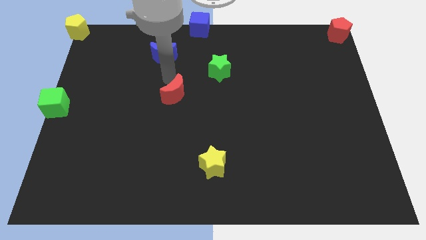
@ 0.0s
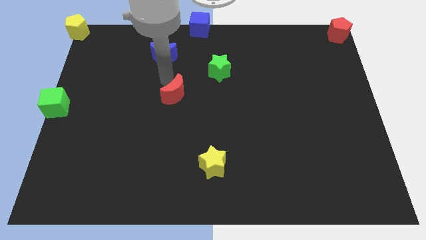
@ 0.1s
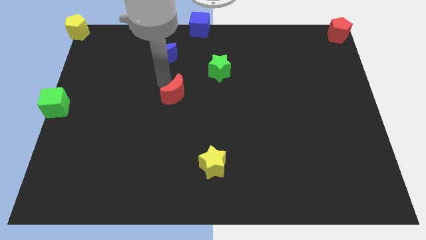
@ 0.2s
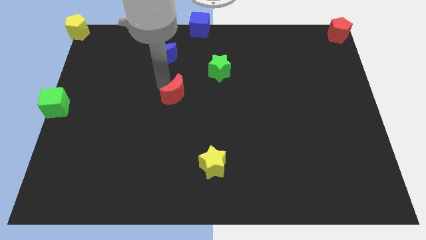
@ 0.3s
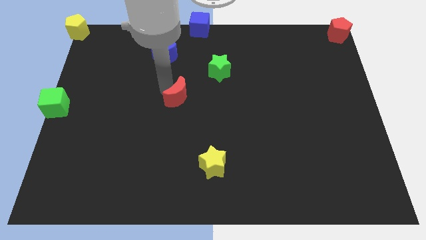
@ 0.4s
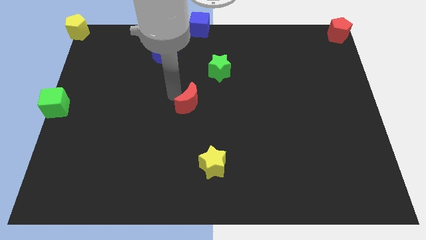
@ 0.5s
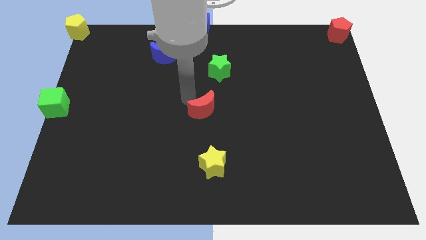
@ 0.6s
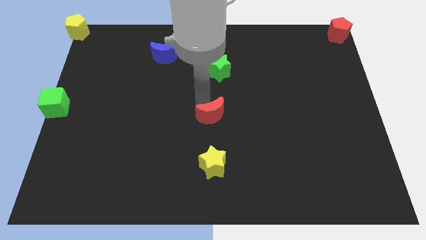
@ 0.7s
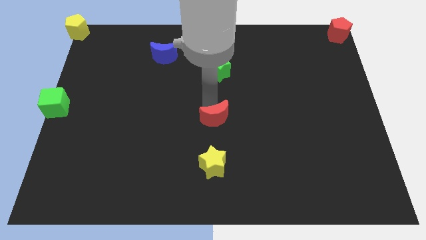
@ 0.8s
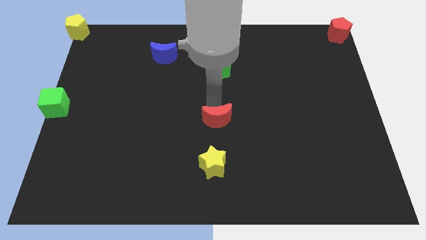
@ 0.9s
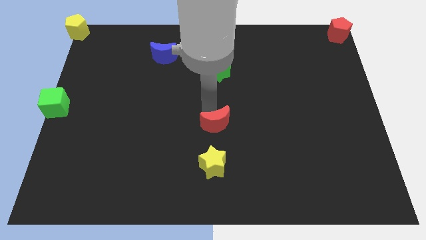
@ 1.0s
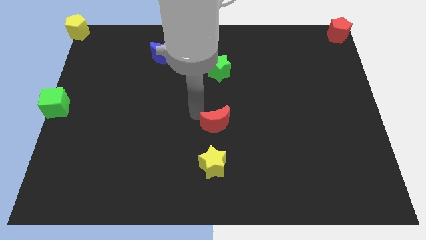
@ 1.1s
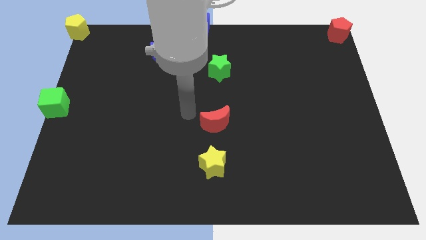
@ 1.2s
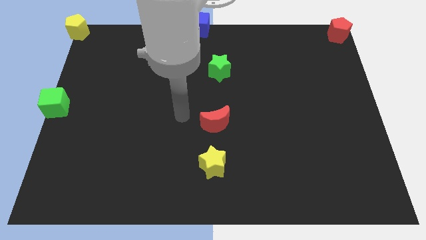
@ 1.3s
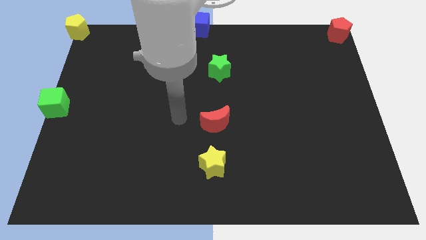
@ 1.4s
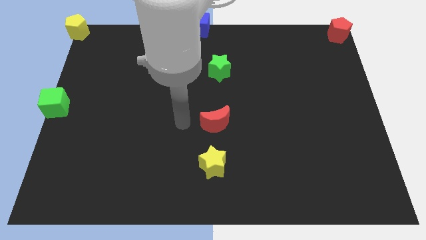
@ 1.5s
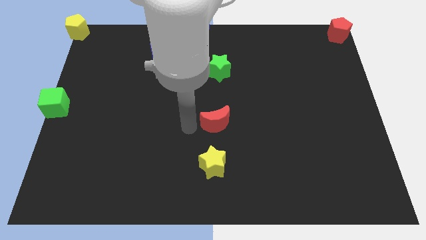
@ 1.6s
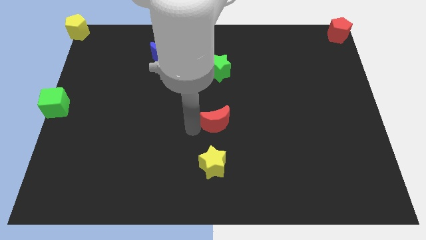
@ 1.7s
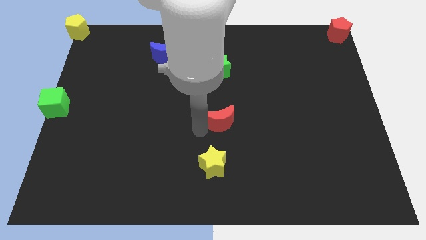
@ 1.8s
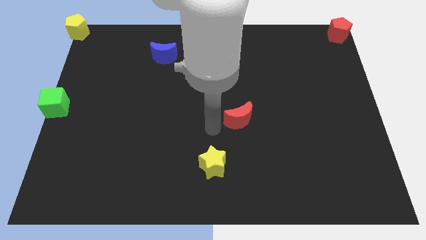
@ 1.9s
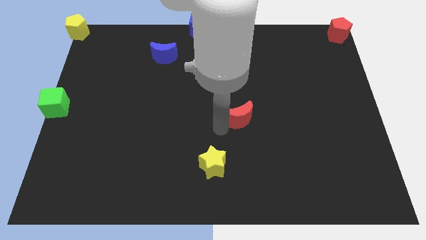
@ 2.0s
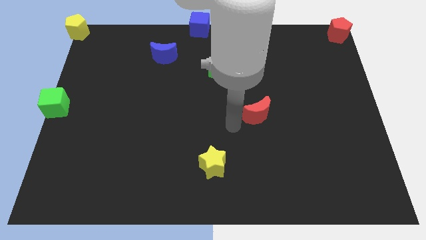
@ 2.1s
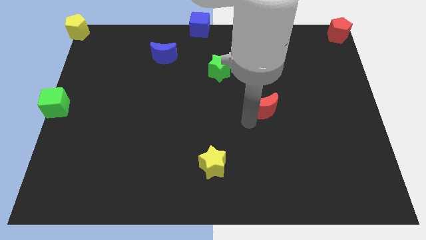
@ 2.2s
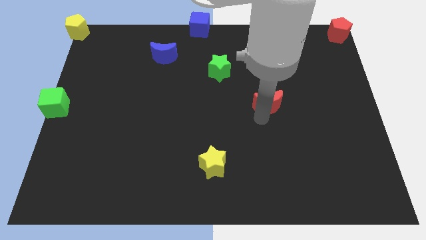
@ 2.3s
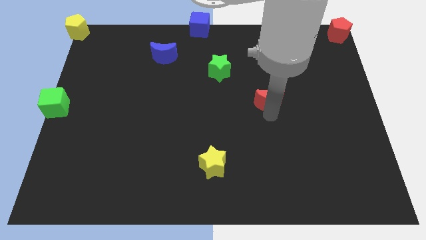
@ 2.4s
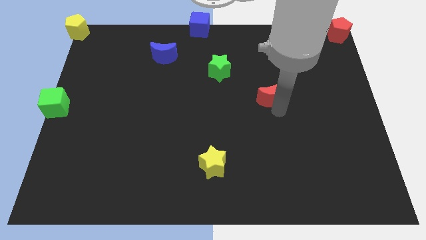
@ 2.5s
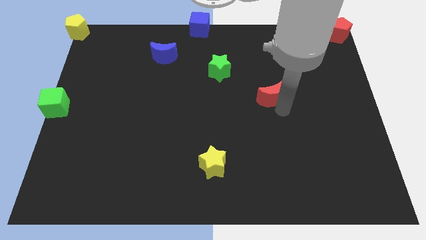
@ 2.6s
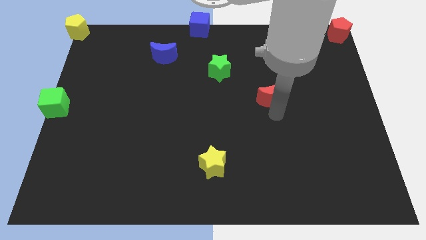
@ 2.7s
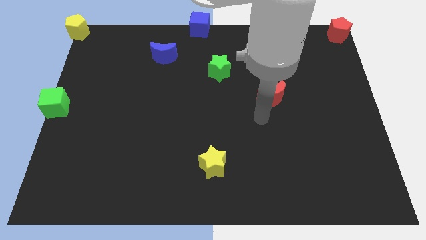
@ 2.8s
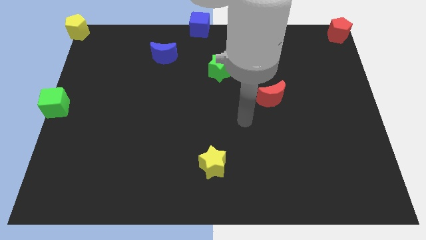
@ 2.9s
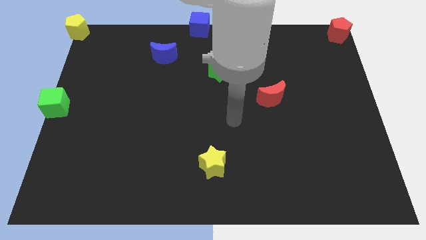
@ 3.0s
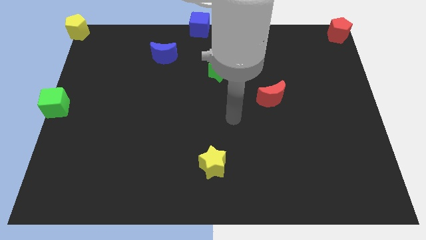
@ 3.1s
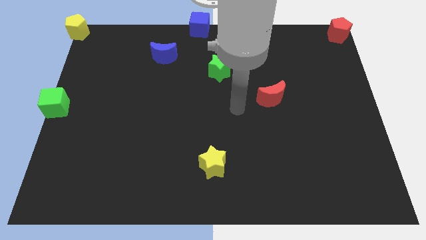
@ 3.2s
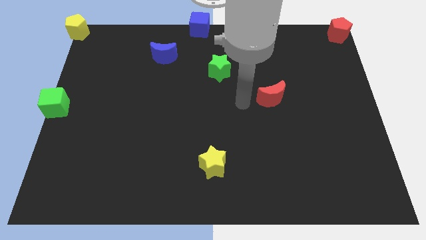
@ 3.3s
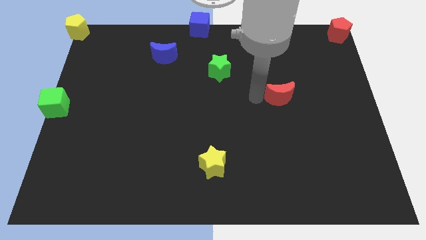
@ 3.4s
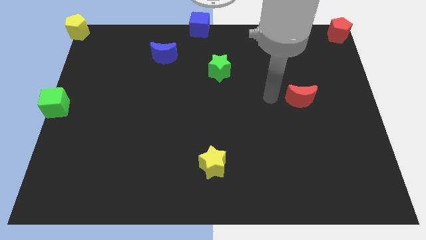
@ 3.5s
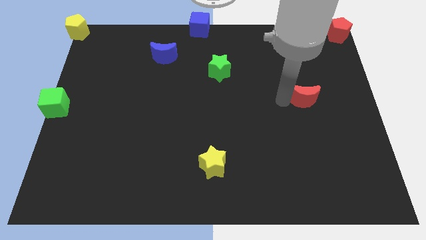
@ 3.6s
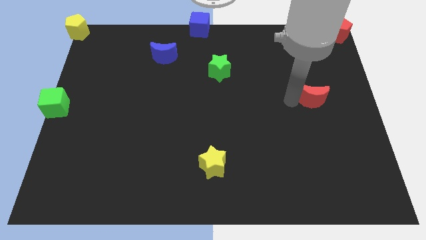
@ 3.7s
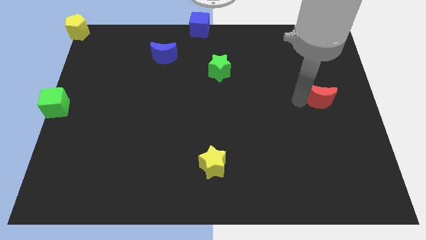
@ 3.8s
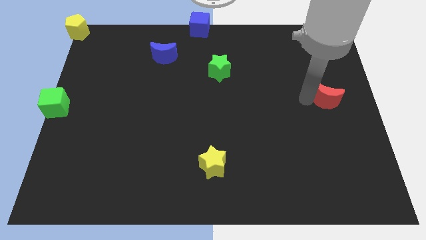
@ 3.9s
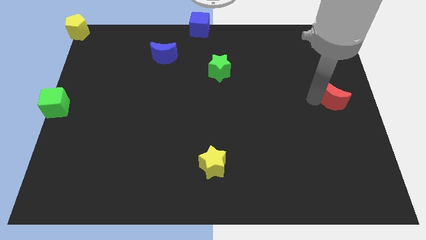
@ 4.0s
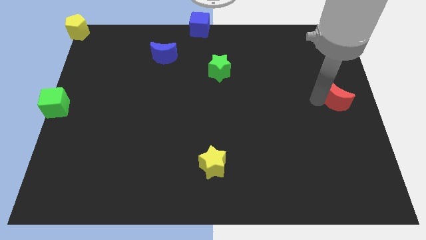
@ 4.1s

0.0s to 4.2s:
move the red crescent to the right of the board

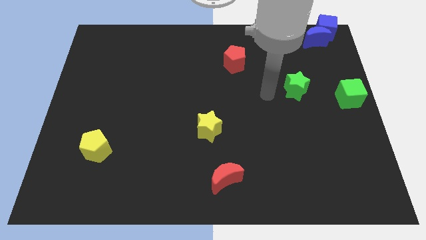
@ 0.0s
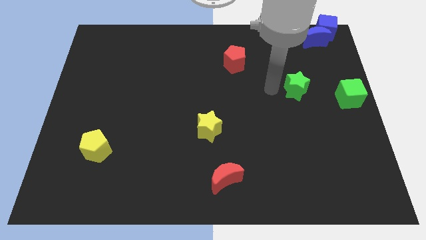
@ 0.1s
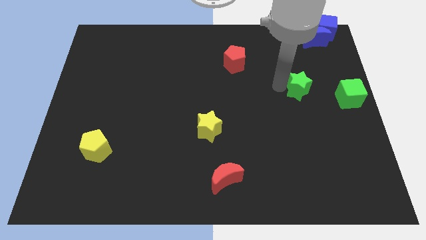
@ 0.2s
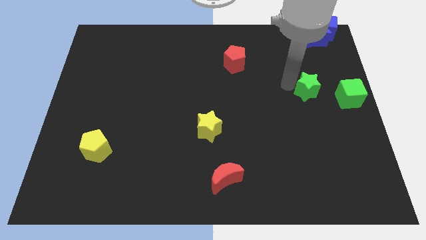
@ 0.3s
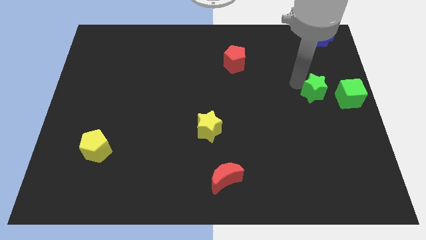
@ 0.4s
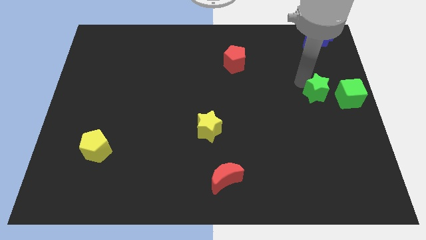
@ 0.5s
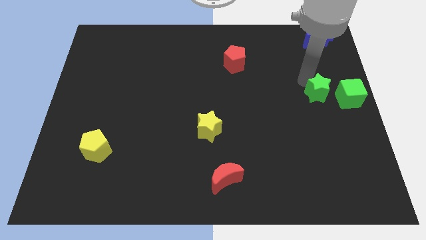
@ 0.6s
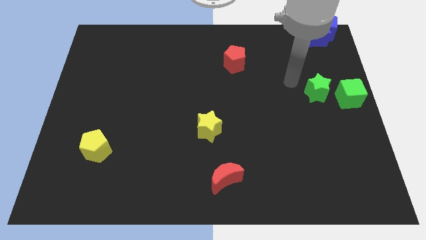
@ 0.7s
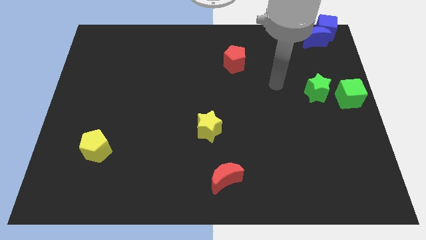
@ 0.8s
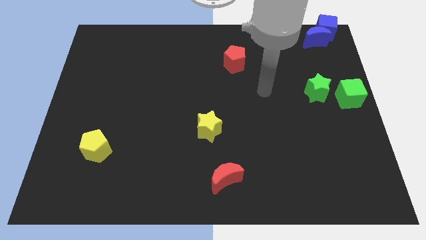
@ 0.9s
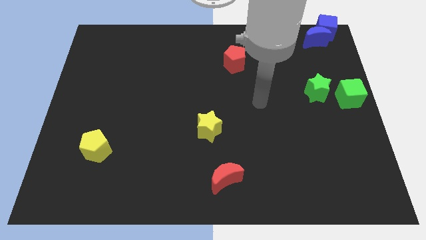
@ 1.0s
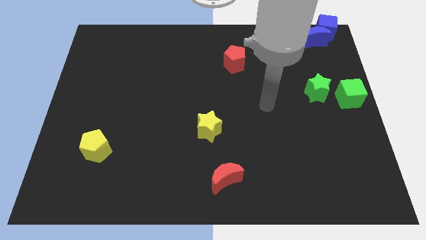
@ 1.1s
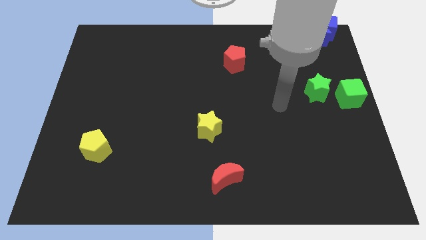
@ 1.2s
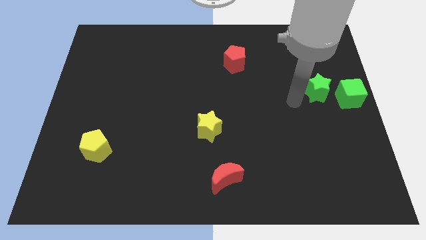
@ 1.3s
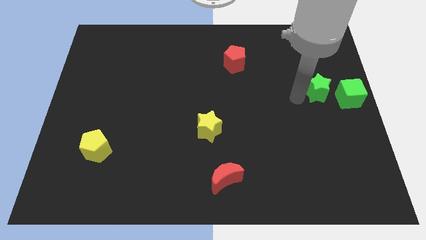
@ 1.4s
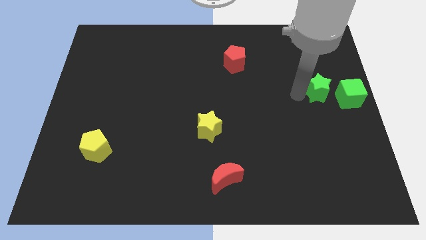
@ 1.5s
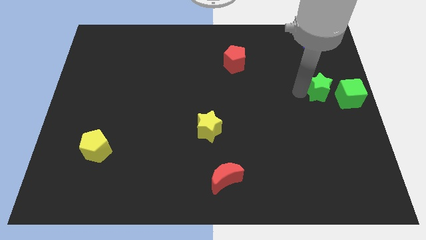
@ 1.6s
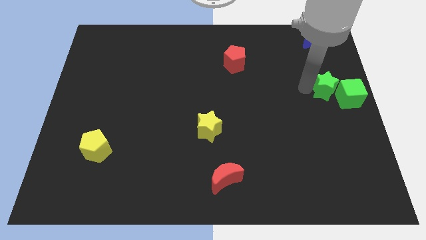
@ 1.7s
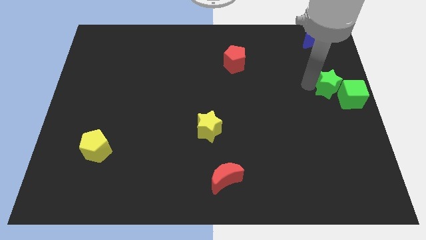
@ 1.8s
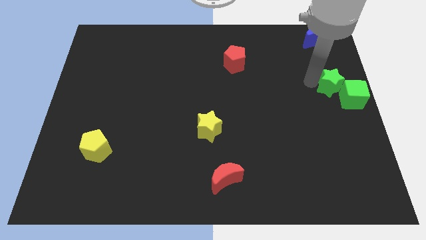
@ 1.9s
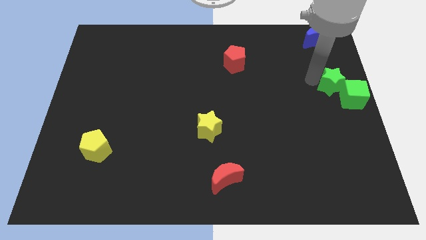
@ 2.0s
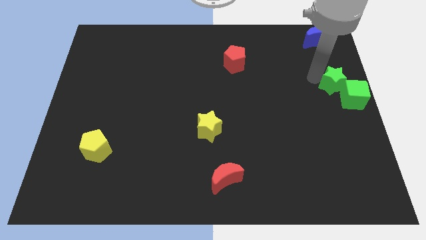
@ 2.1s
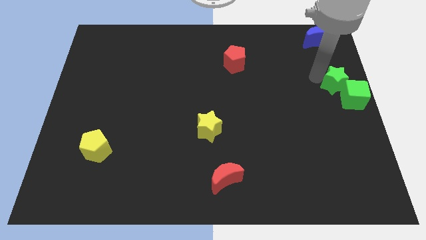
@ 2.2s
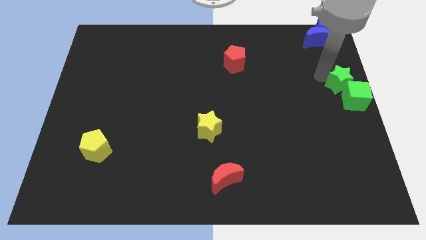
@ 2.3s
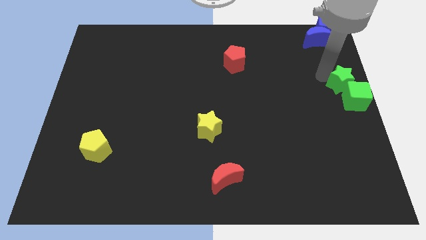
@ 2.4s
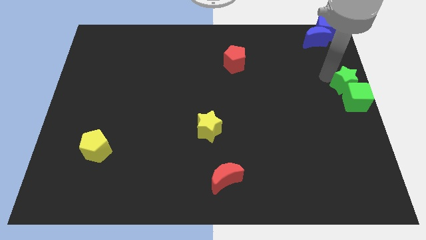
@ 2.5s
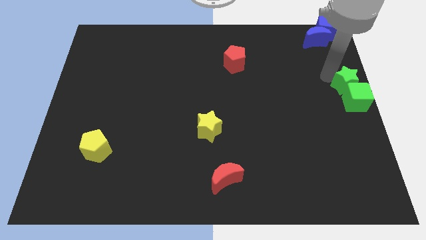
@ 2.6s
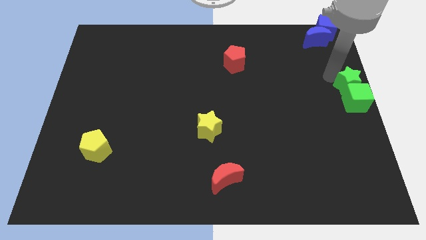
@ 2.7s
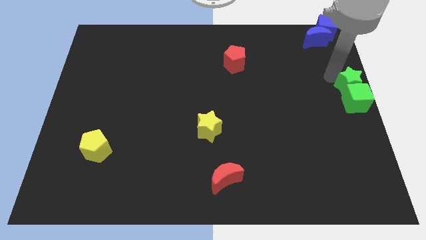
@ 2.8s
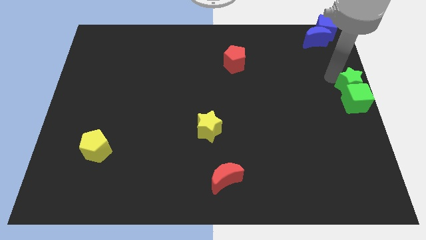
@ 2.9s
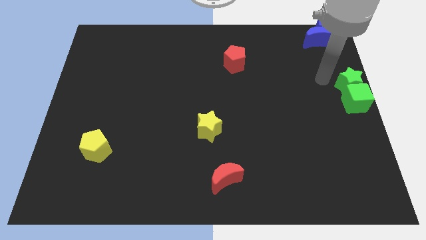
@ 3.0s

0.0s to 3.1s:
place the green star at the top side of the green cube

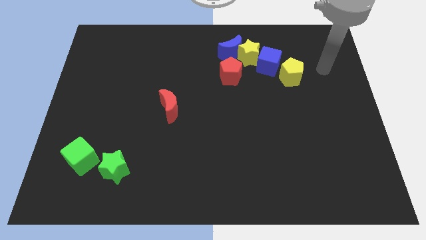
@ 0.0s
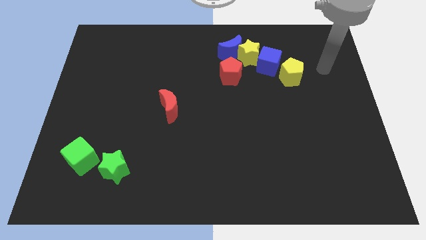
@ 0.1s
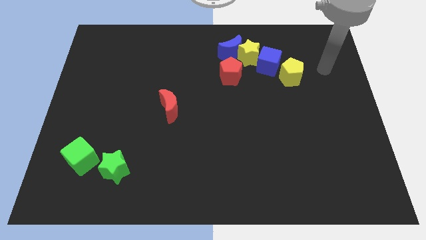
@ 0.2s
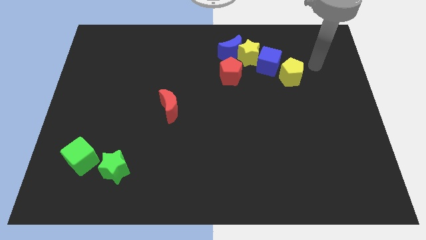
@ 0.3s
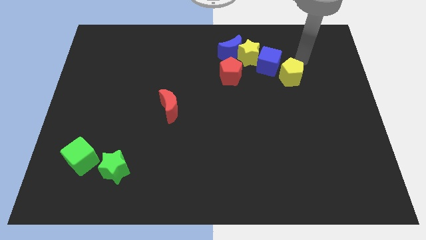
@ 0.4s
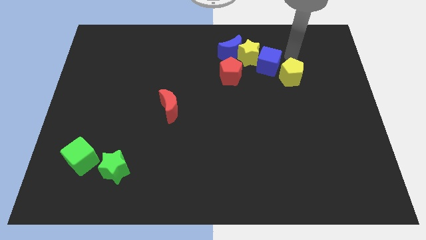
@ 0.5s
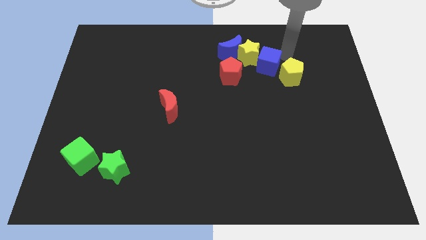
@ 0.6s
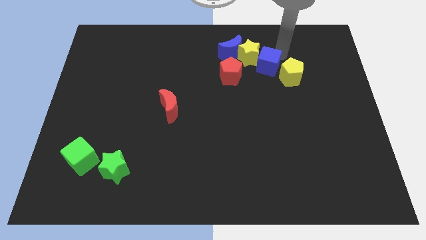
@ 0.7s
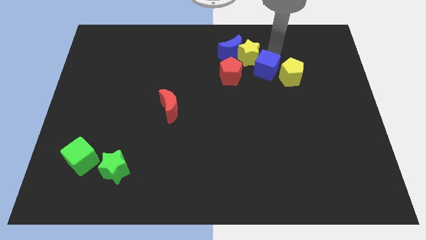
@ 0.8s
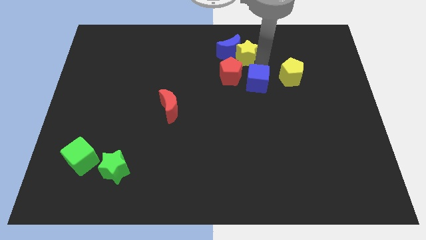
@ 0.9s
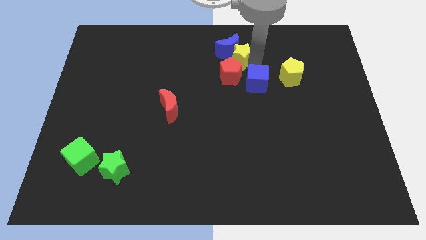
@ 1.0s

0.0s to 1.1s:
push the blue cube towards down

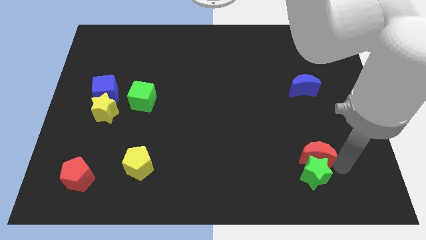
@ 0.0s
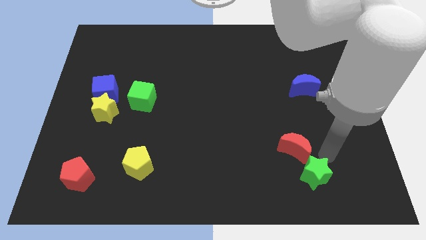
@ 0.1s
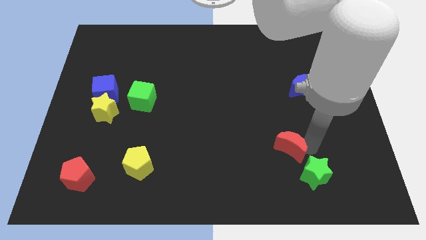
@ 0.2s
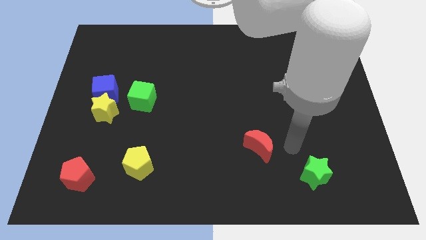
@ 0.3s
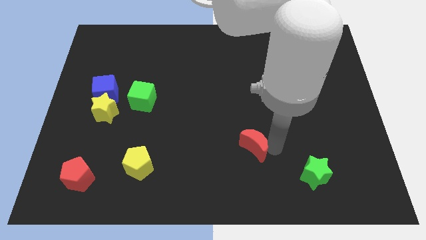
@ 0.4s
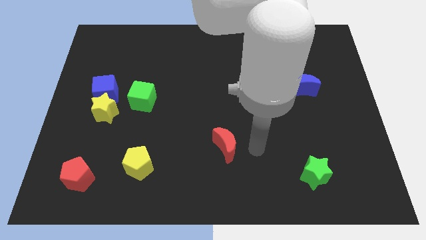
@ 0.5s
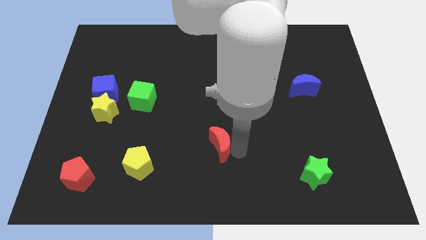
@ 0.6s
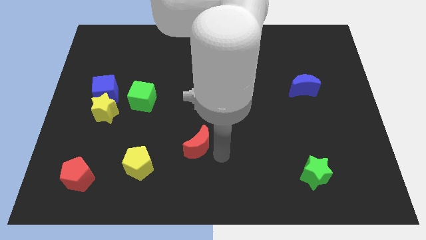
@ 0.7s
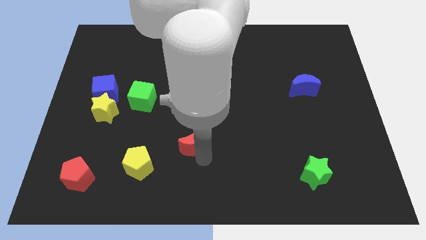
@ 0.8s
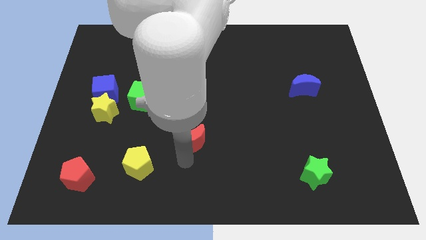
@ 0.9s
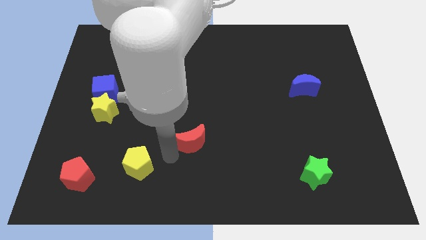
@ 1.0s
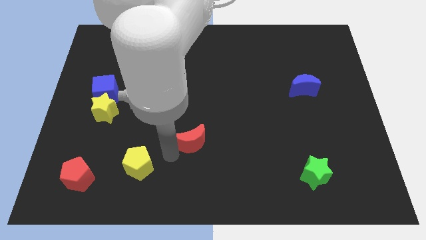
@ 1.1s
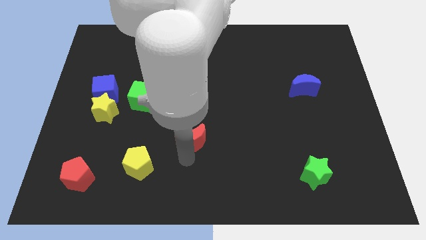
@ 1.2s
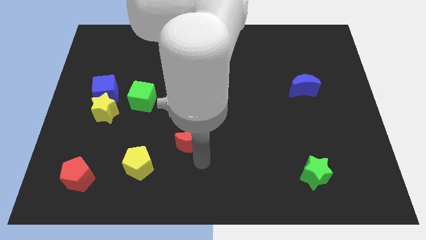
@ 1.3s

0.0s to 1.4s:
push the red crescent towards yellow pentagon
